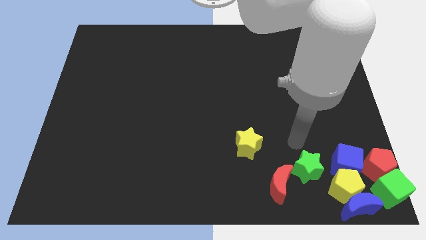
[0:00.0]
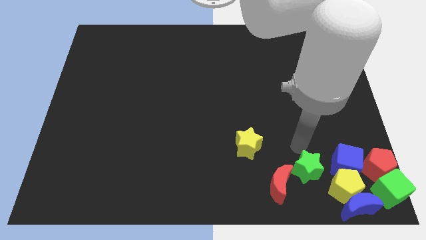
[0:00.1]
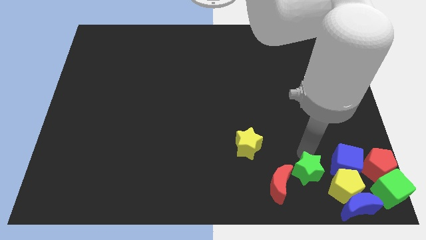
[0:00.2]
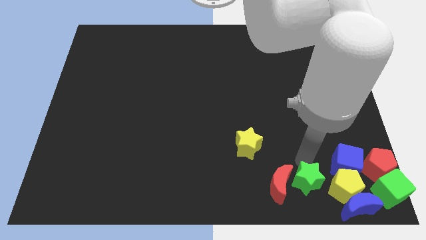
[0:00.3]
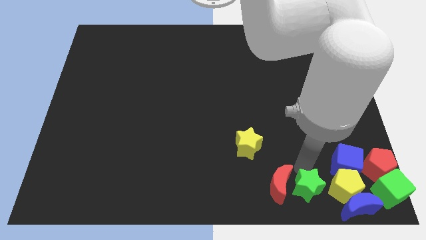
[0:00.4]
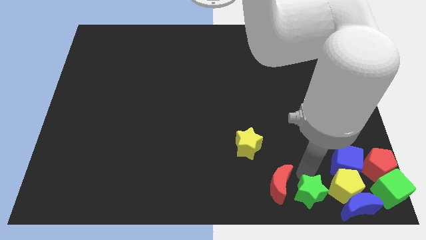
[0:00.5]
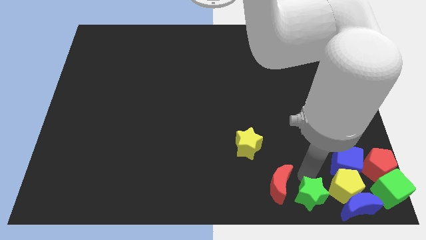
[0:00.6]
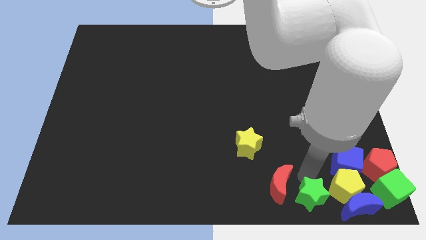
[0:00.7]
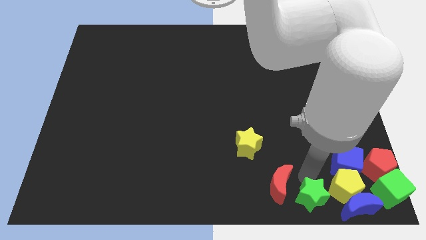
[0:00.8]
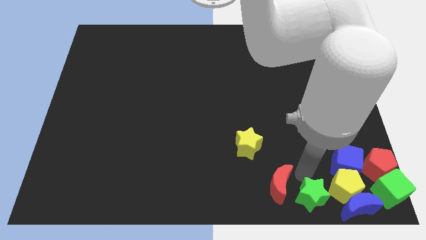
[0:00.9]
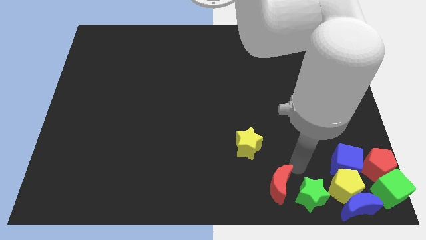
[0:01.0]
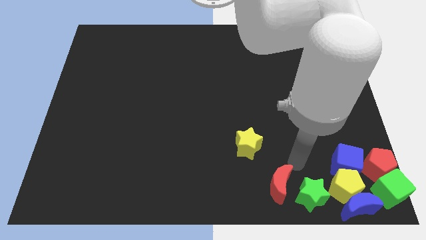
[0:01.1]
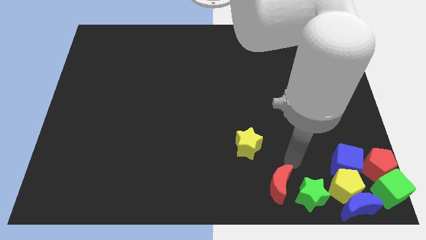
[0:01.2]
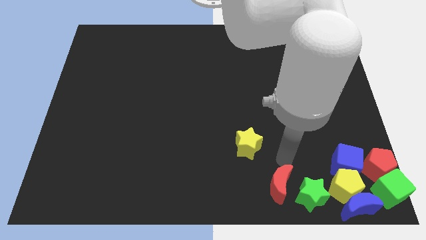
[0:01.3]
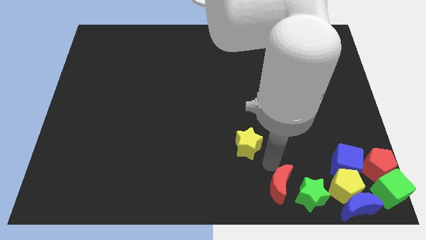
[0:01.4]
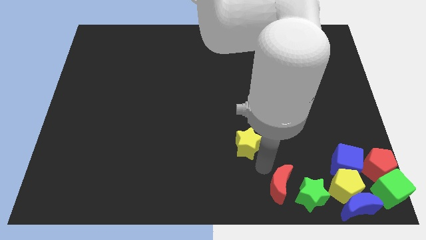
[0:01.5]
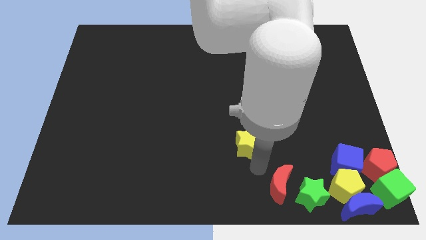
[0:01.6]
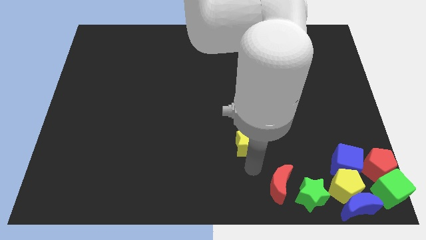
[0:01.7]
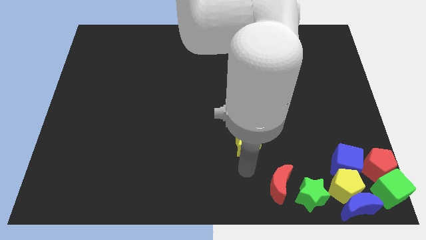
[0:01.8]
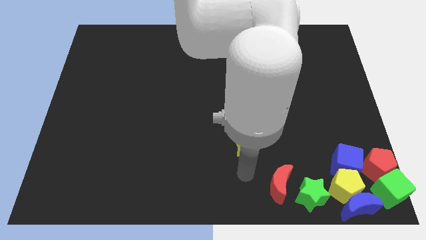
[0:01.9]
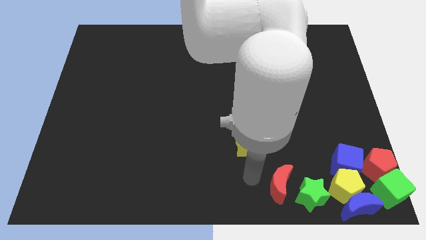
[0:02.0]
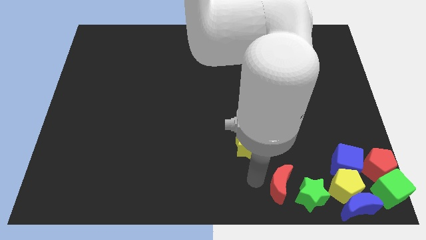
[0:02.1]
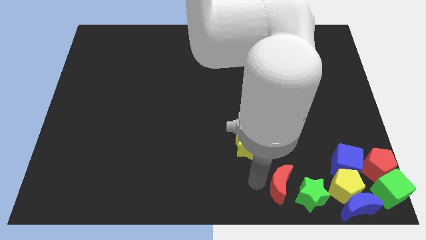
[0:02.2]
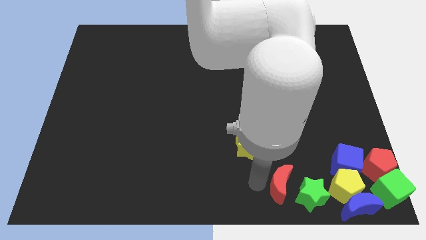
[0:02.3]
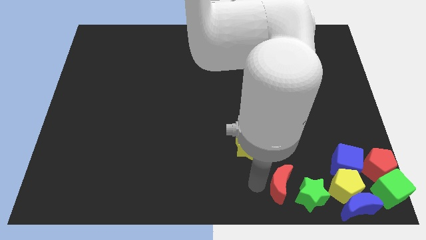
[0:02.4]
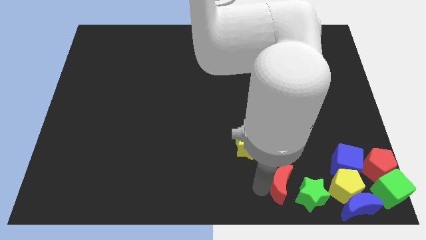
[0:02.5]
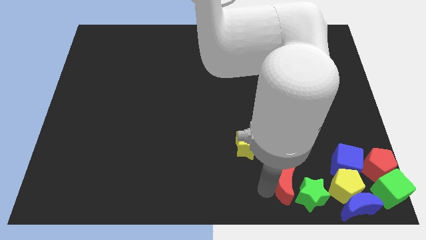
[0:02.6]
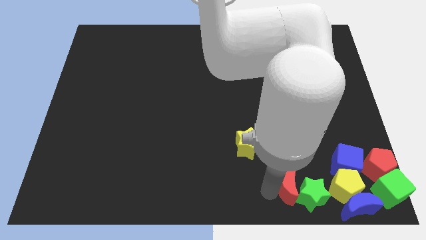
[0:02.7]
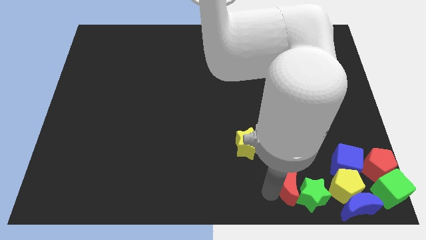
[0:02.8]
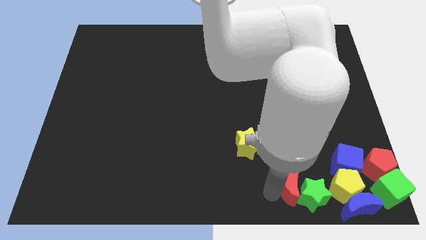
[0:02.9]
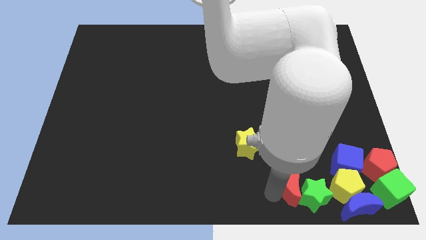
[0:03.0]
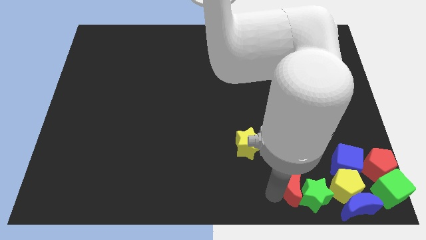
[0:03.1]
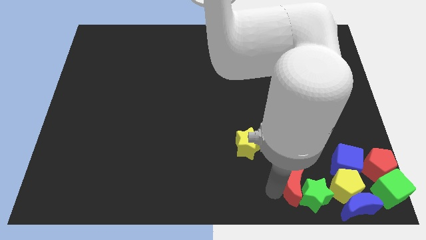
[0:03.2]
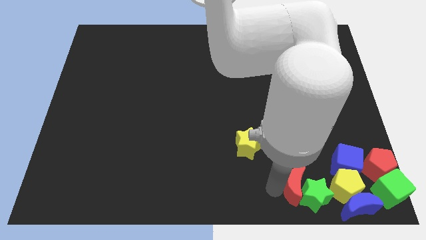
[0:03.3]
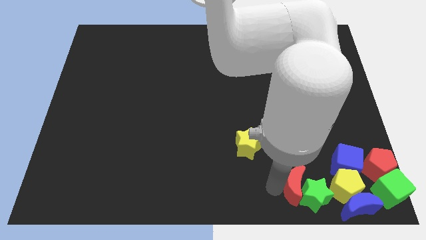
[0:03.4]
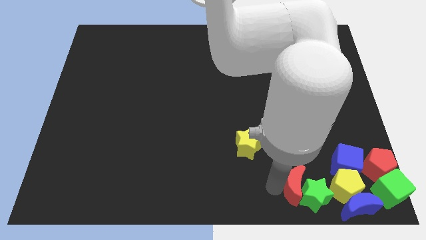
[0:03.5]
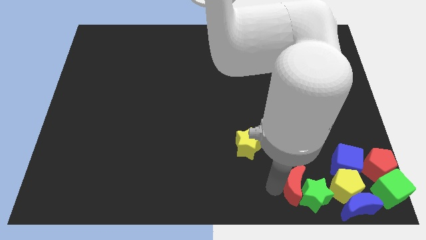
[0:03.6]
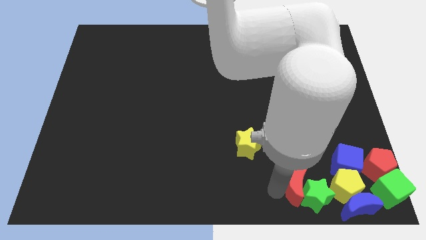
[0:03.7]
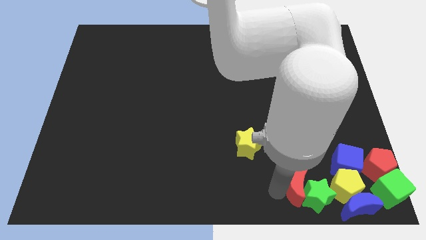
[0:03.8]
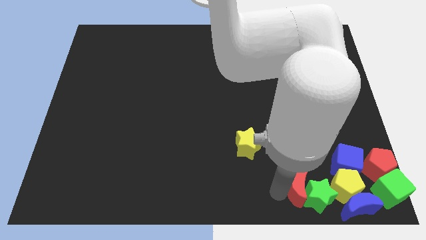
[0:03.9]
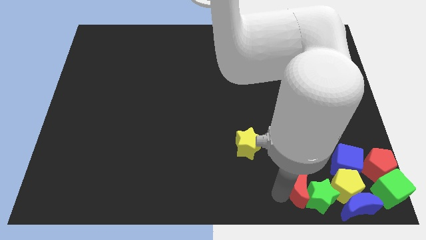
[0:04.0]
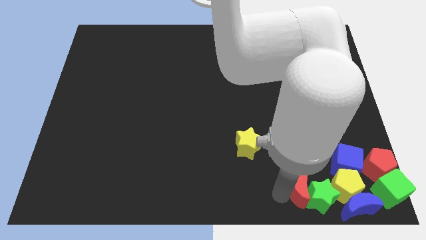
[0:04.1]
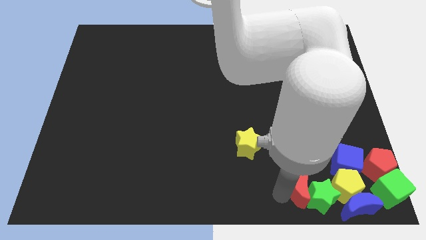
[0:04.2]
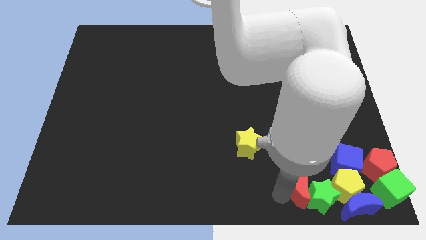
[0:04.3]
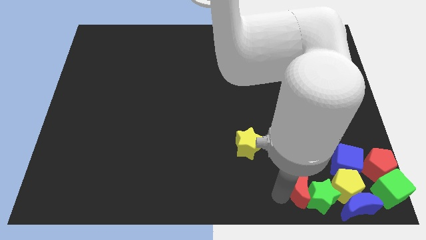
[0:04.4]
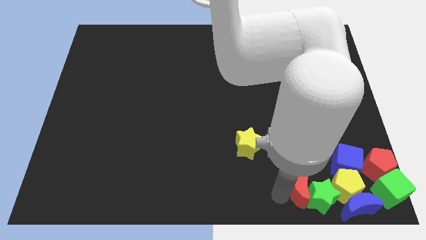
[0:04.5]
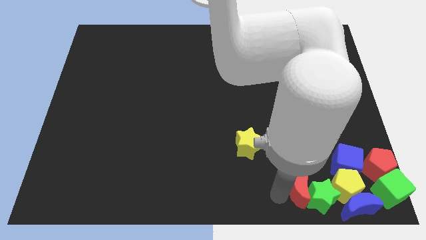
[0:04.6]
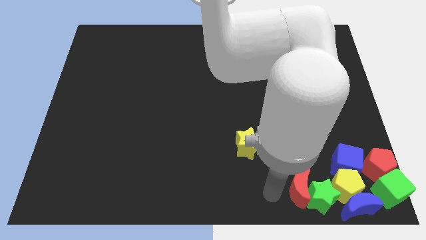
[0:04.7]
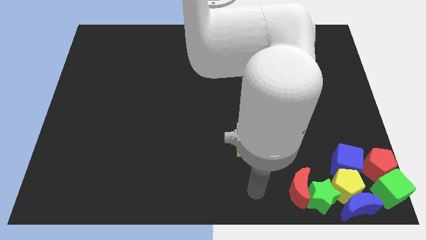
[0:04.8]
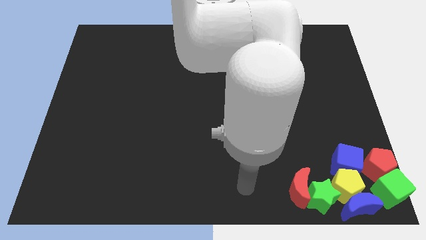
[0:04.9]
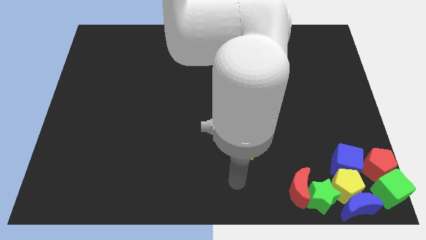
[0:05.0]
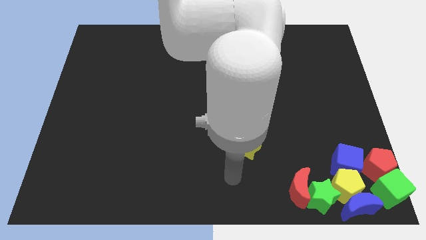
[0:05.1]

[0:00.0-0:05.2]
push the green star and red crescent into the yellow pentagon

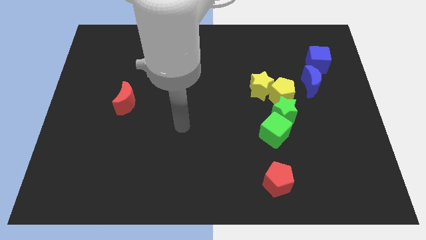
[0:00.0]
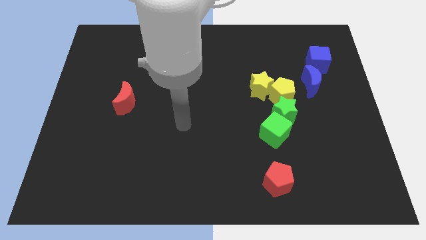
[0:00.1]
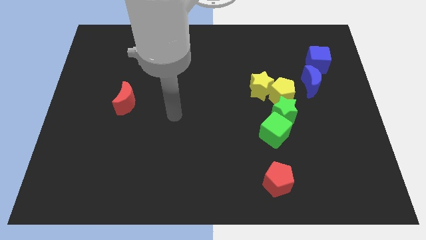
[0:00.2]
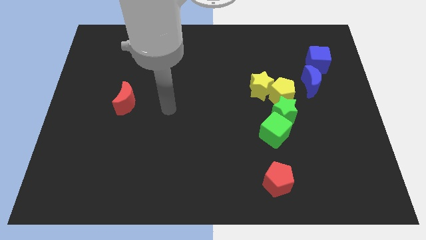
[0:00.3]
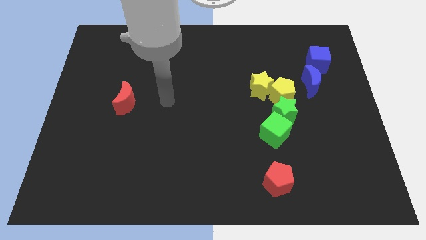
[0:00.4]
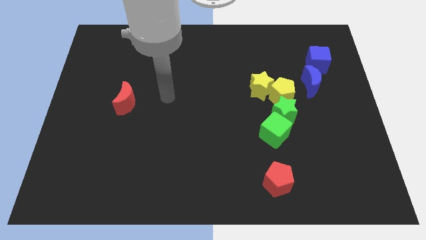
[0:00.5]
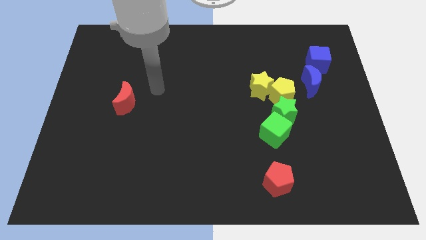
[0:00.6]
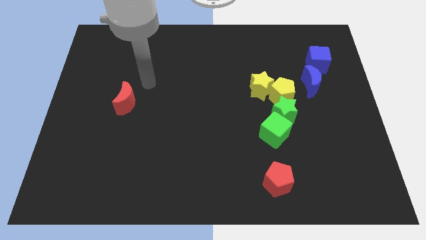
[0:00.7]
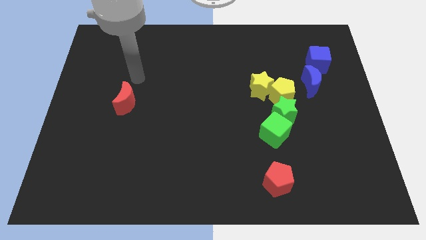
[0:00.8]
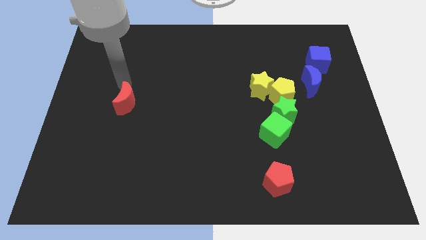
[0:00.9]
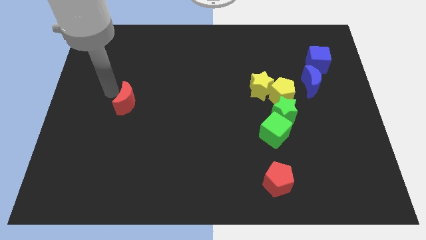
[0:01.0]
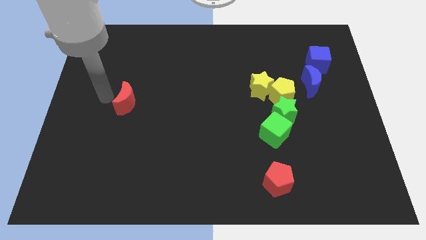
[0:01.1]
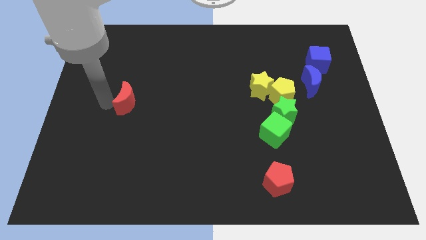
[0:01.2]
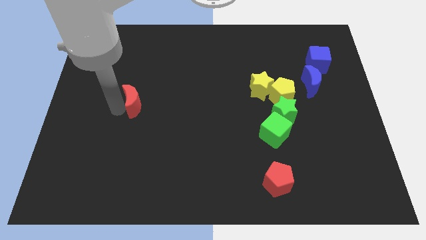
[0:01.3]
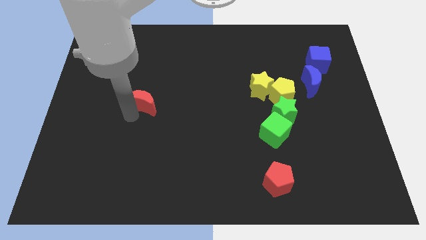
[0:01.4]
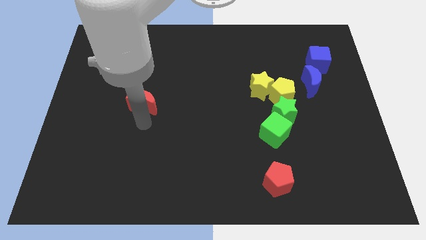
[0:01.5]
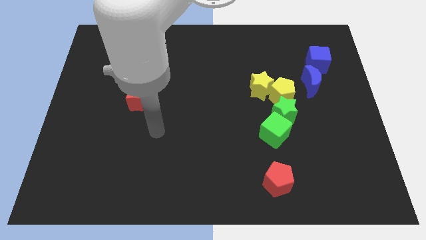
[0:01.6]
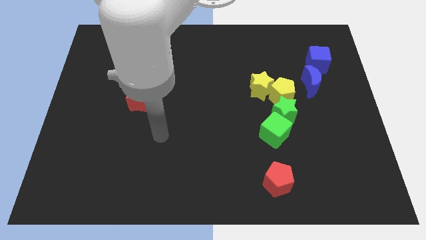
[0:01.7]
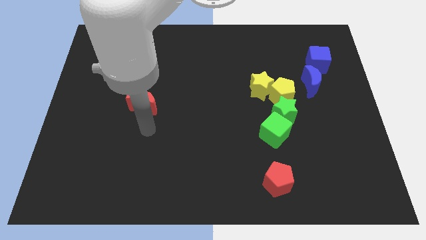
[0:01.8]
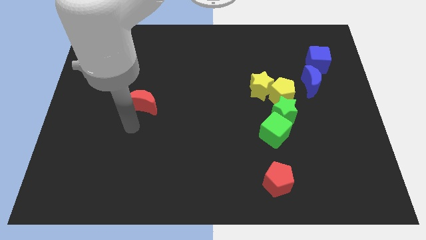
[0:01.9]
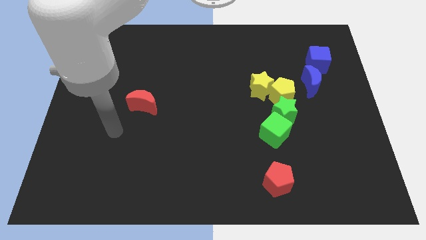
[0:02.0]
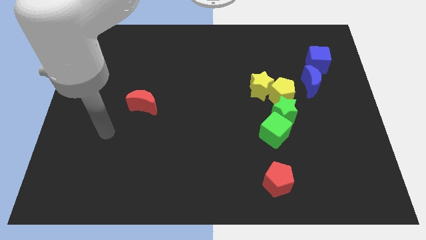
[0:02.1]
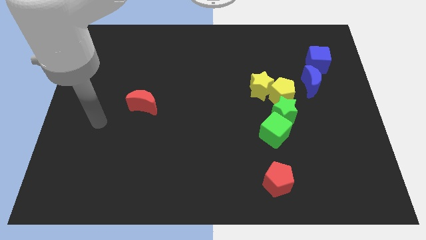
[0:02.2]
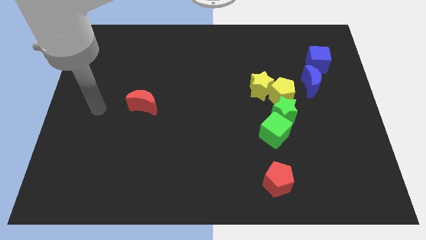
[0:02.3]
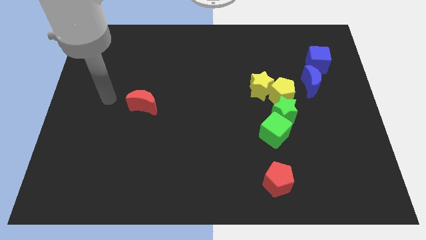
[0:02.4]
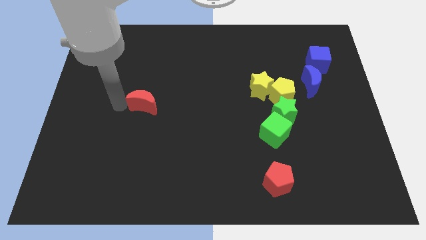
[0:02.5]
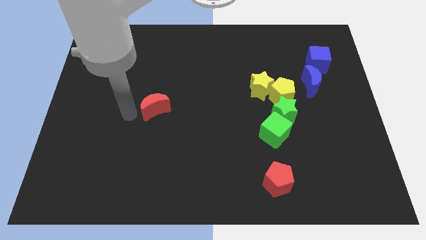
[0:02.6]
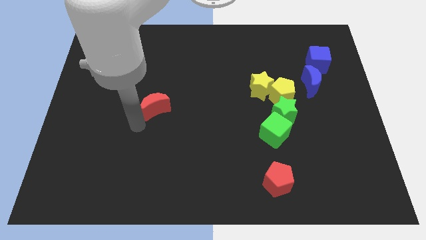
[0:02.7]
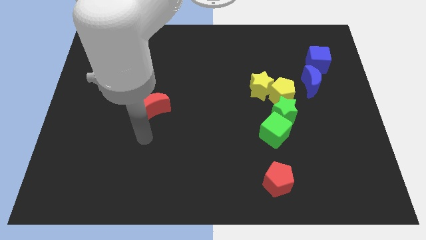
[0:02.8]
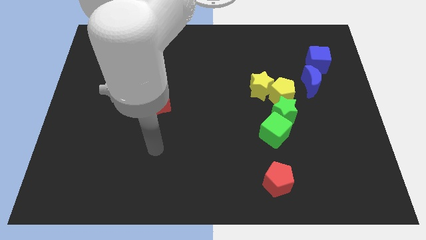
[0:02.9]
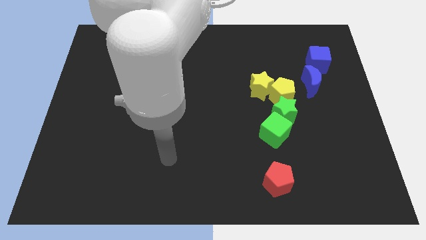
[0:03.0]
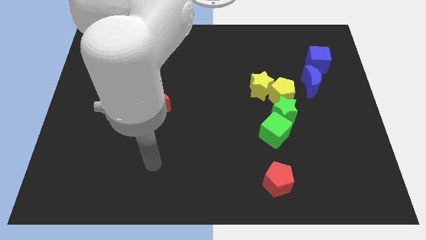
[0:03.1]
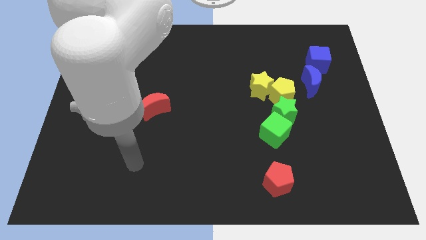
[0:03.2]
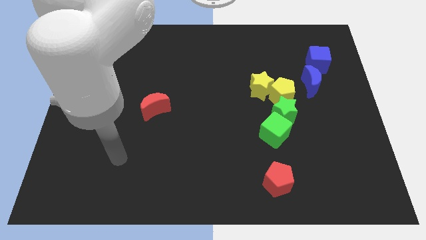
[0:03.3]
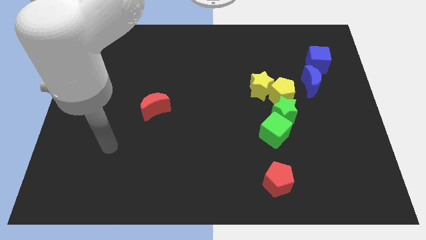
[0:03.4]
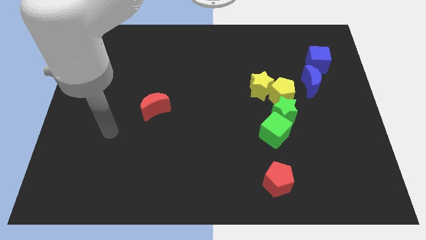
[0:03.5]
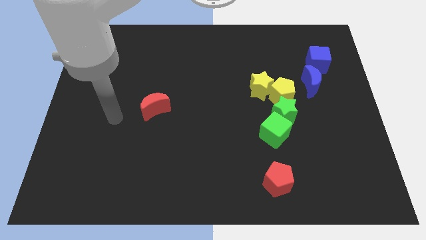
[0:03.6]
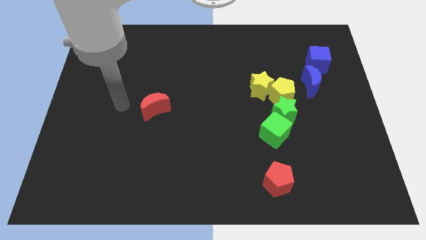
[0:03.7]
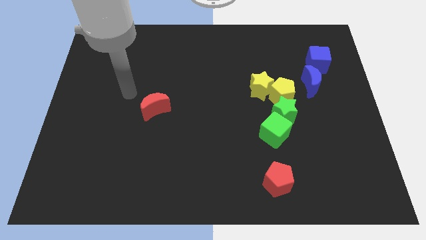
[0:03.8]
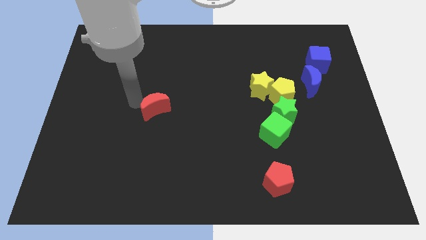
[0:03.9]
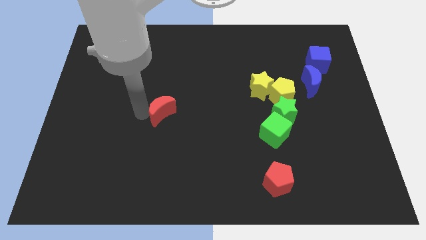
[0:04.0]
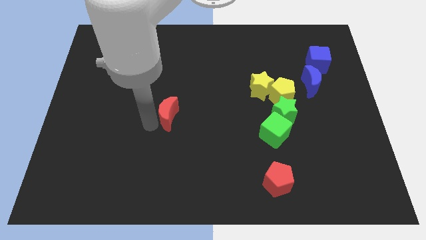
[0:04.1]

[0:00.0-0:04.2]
move the red crescent to the center
